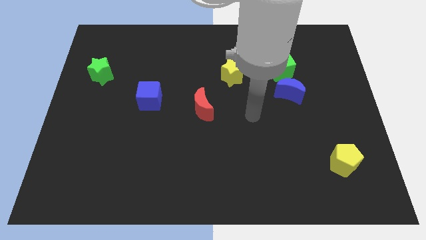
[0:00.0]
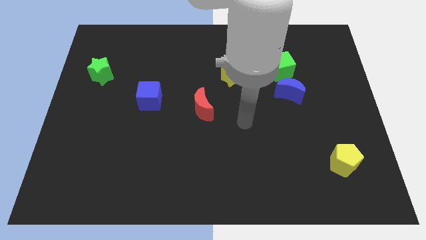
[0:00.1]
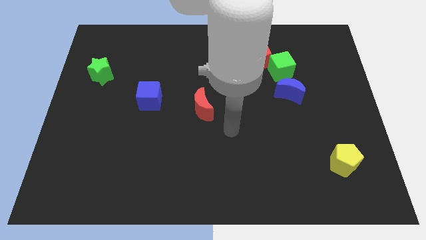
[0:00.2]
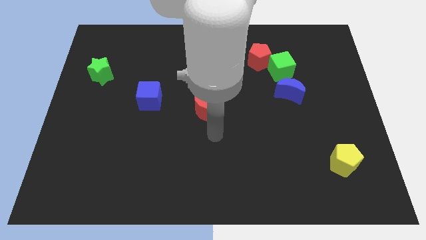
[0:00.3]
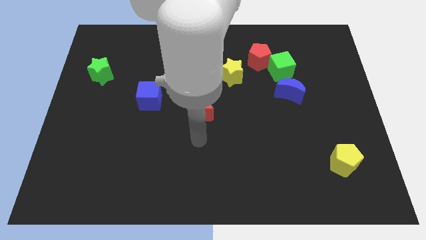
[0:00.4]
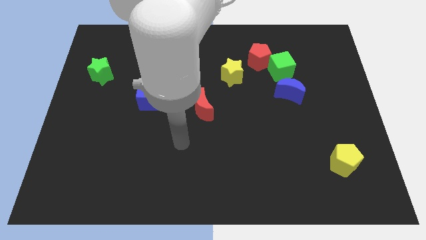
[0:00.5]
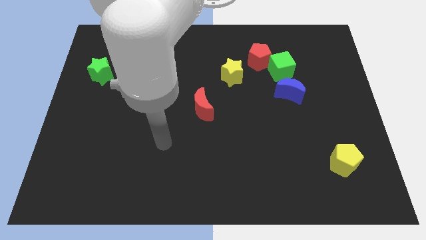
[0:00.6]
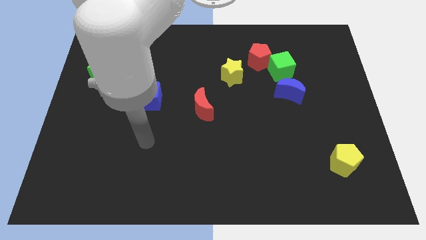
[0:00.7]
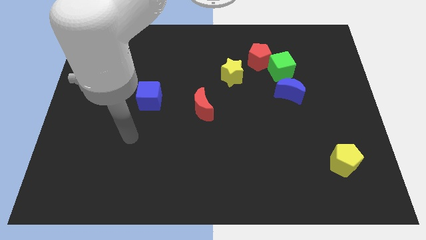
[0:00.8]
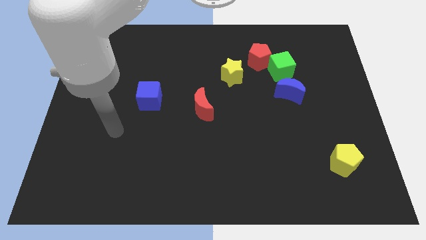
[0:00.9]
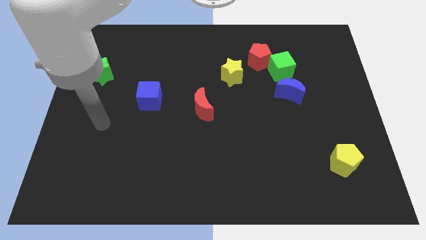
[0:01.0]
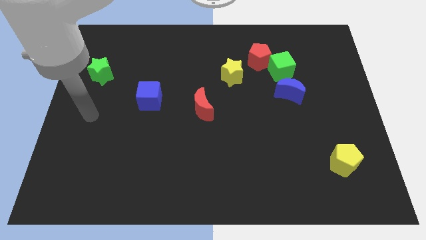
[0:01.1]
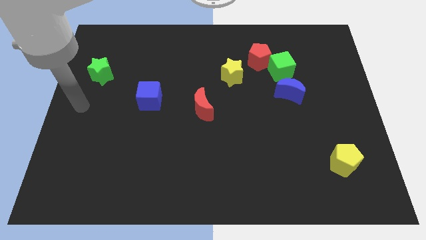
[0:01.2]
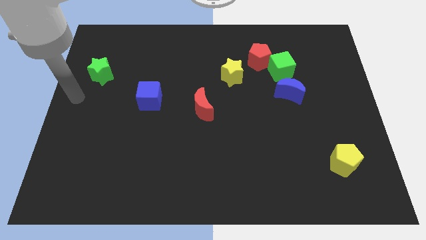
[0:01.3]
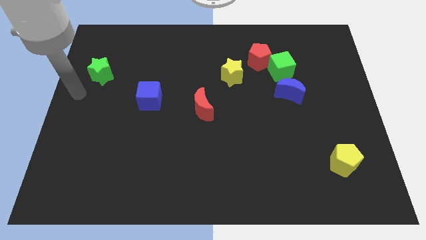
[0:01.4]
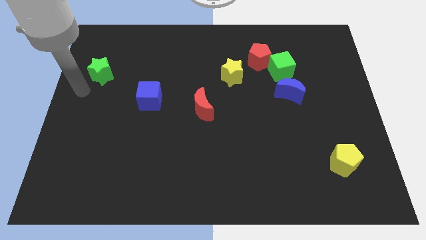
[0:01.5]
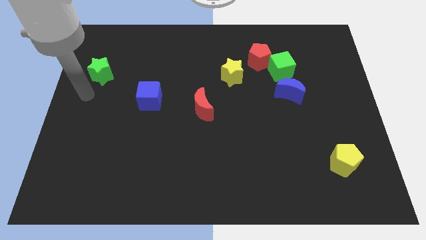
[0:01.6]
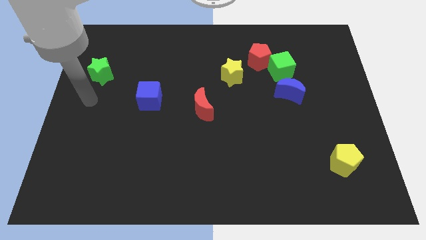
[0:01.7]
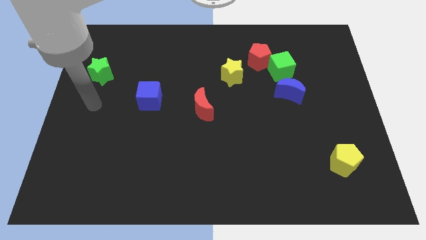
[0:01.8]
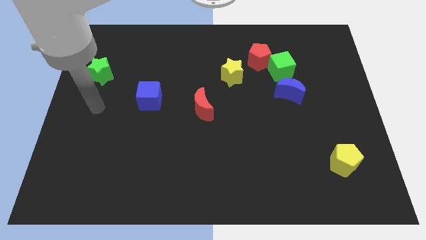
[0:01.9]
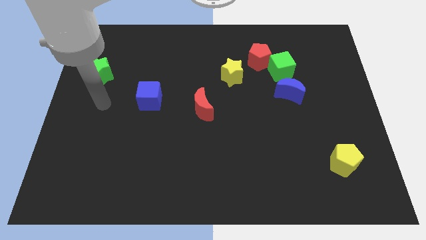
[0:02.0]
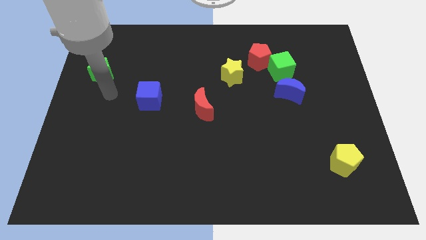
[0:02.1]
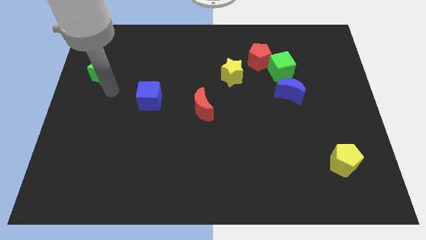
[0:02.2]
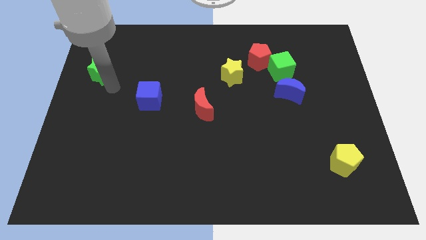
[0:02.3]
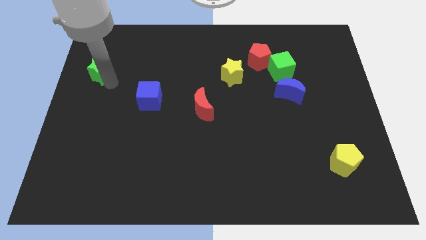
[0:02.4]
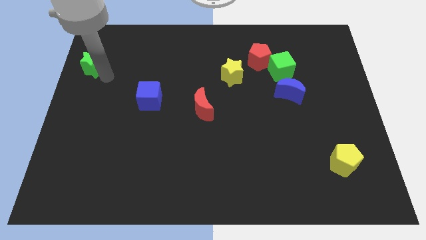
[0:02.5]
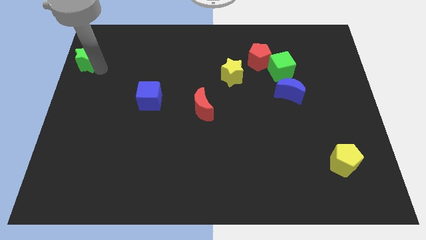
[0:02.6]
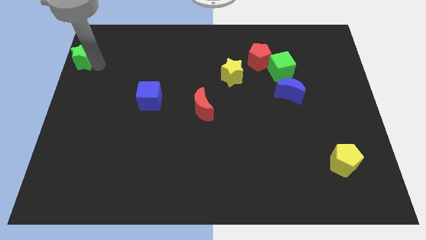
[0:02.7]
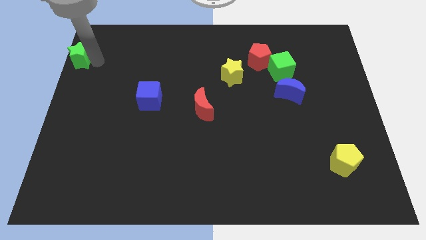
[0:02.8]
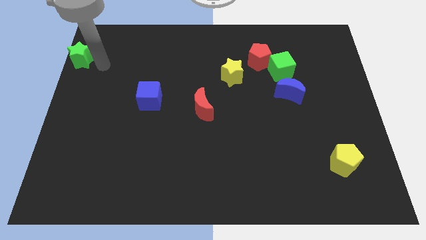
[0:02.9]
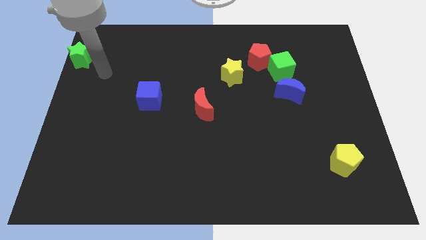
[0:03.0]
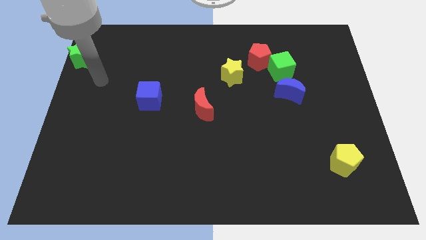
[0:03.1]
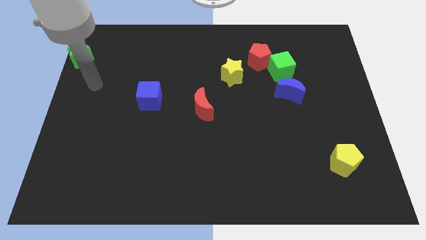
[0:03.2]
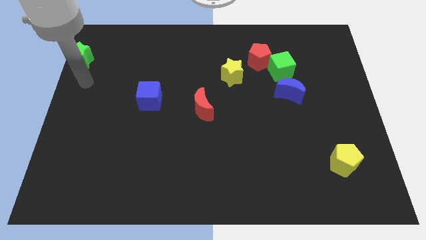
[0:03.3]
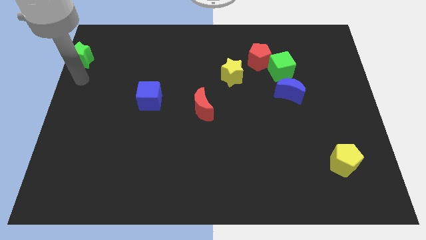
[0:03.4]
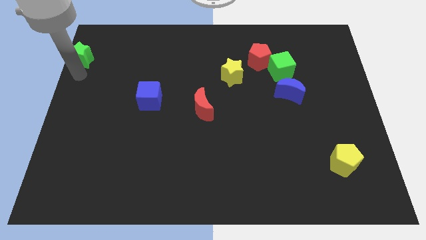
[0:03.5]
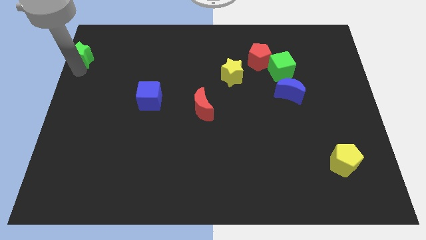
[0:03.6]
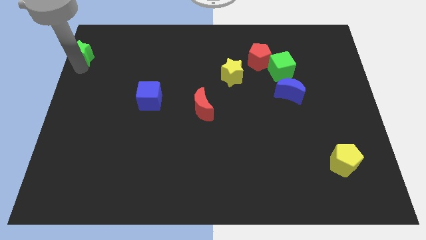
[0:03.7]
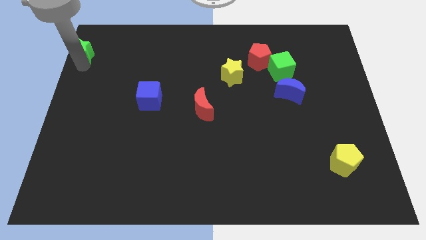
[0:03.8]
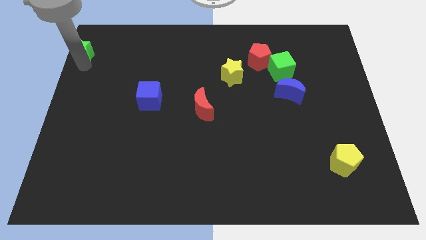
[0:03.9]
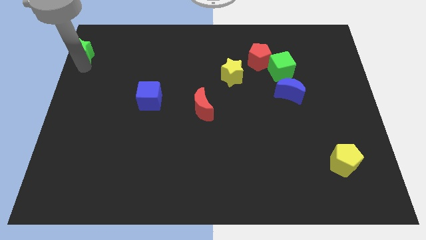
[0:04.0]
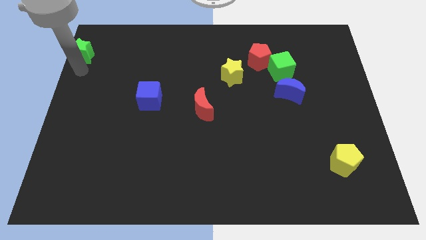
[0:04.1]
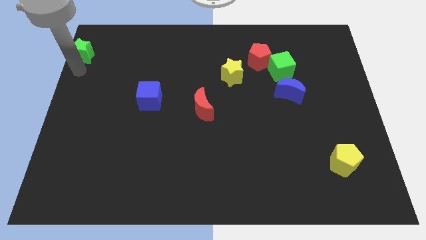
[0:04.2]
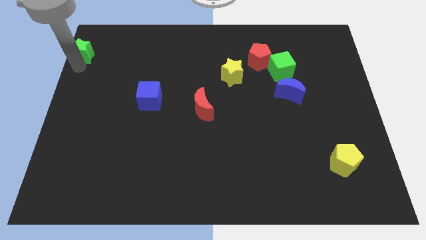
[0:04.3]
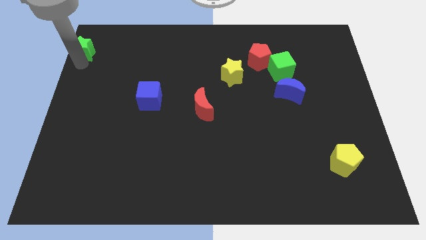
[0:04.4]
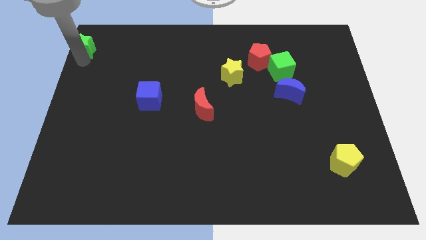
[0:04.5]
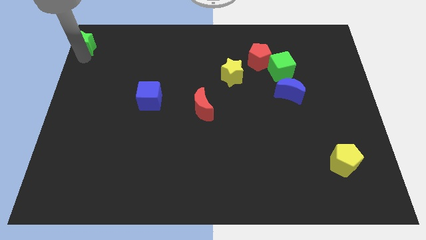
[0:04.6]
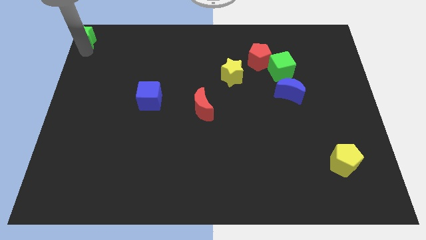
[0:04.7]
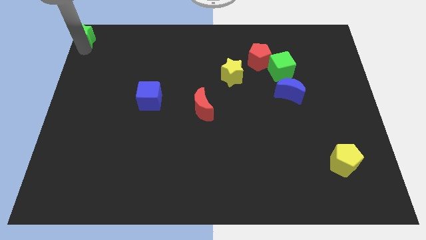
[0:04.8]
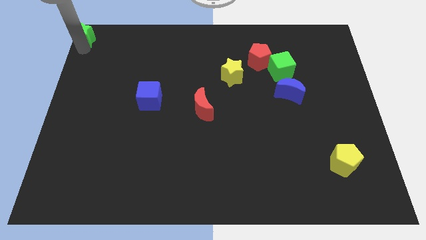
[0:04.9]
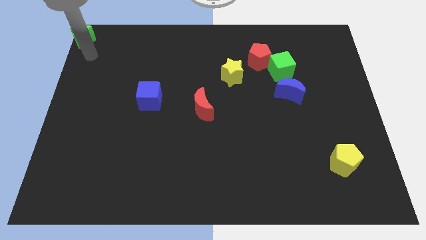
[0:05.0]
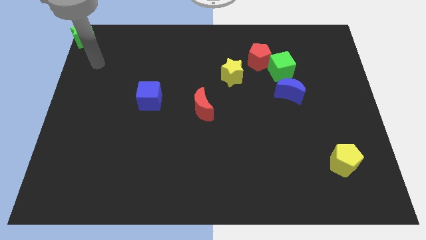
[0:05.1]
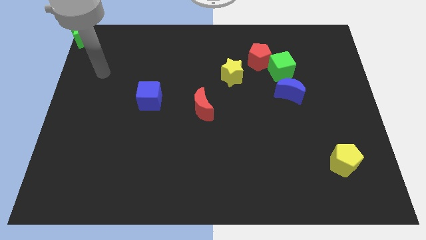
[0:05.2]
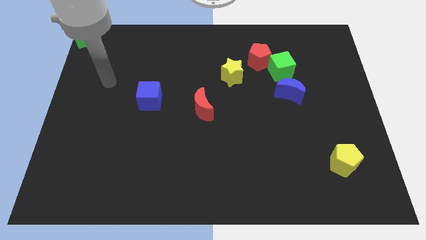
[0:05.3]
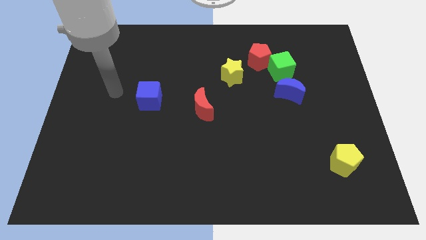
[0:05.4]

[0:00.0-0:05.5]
move the green star to the top left corner

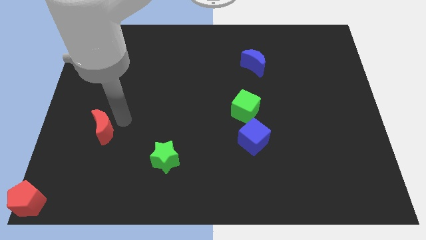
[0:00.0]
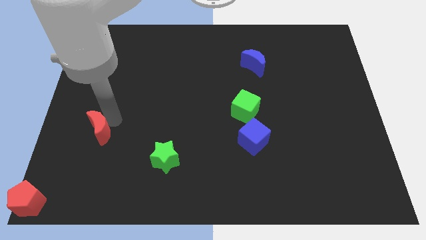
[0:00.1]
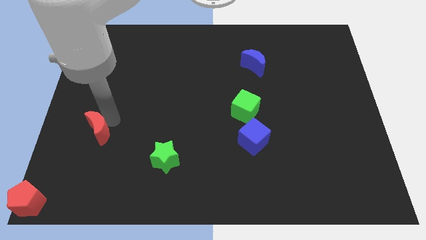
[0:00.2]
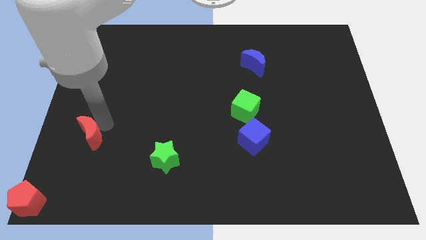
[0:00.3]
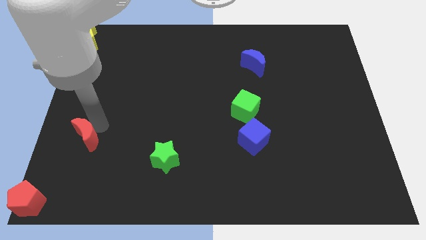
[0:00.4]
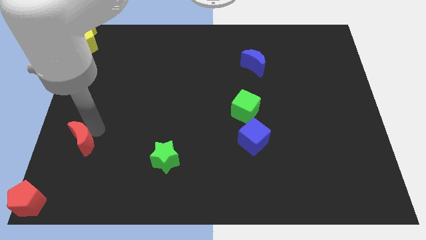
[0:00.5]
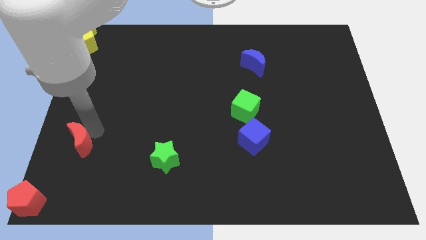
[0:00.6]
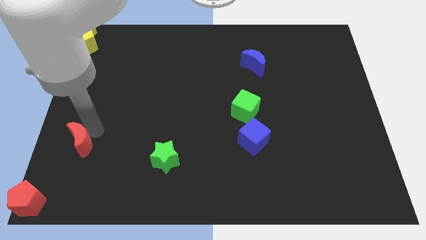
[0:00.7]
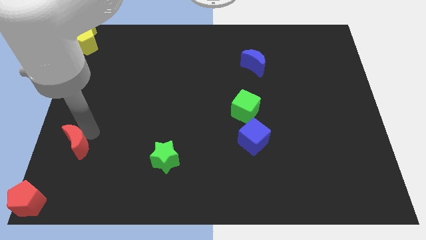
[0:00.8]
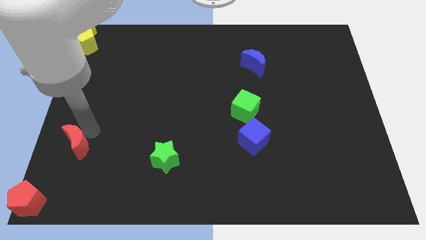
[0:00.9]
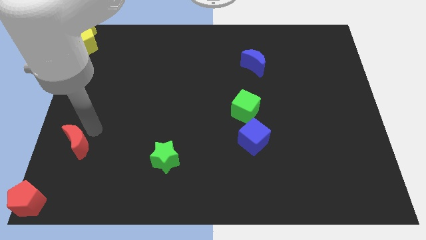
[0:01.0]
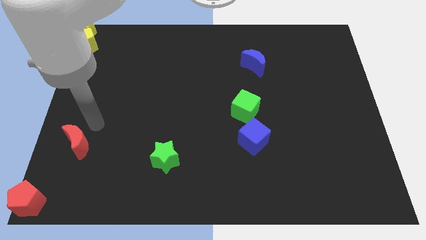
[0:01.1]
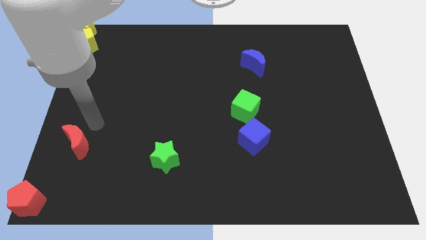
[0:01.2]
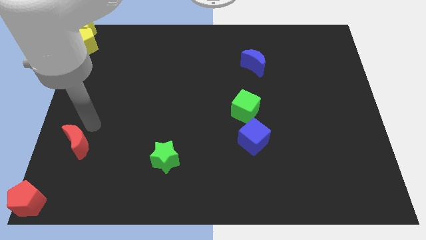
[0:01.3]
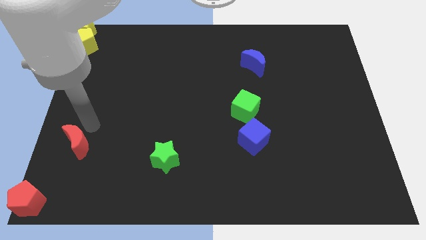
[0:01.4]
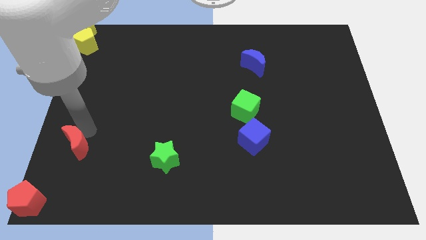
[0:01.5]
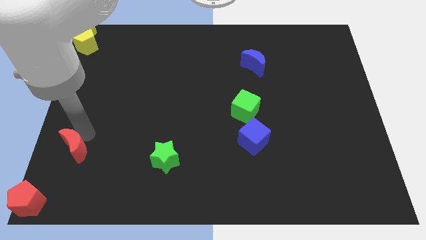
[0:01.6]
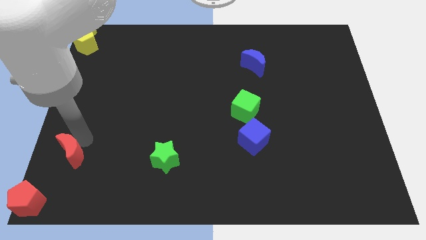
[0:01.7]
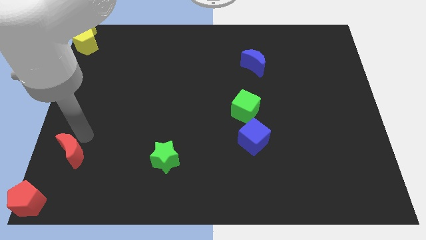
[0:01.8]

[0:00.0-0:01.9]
move the red moon towards the red pentagon

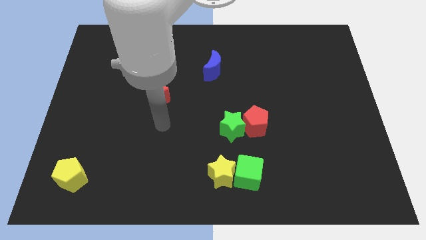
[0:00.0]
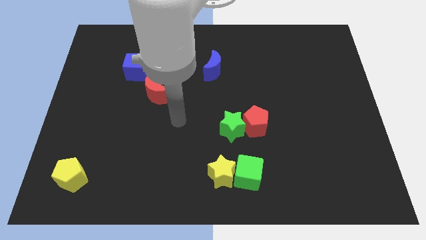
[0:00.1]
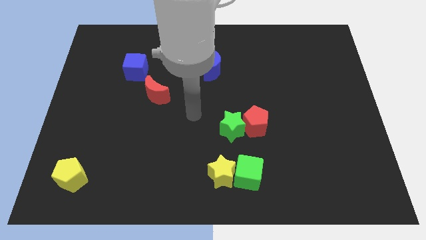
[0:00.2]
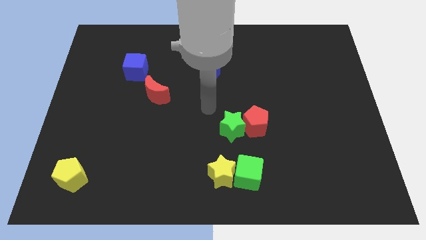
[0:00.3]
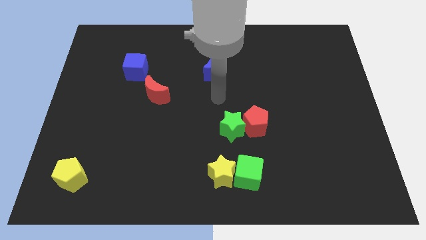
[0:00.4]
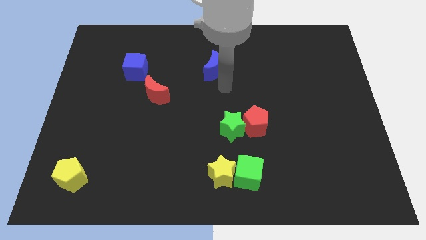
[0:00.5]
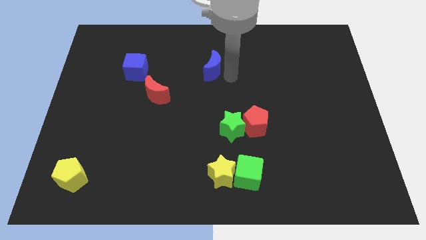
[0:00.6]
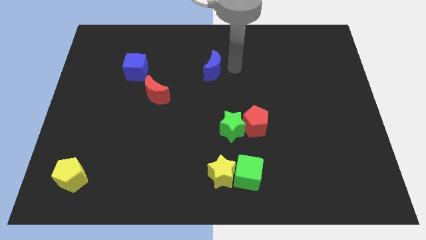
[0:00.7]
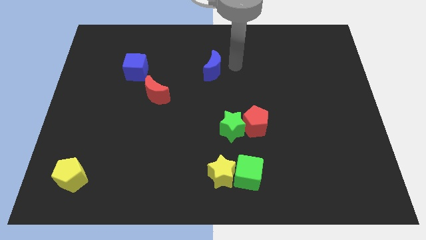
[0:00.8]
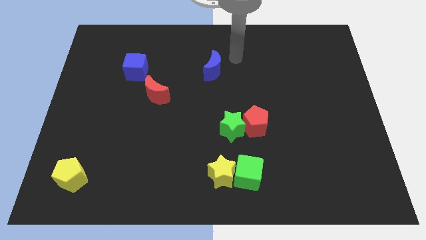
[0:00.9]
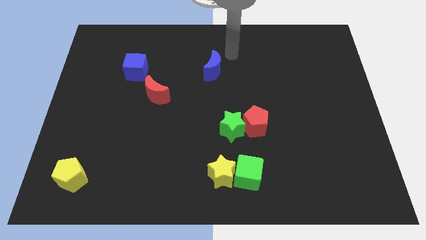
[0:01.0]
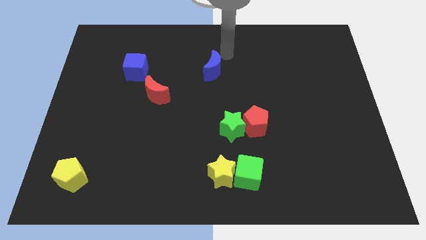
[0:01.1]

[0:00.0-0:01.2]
move your arm towards the top of the blue crescent

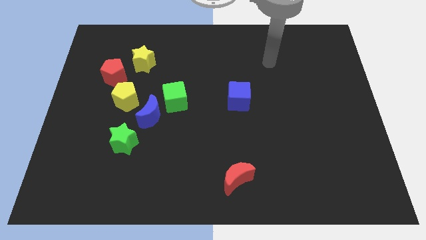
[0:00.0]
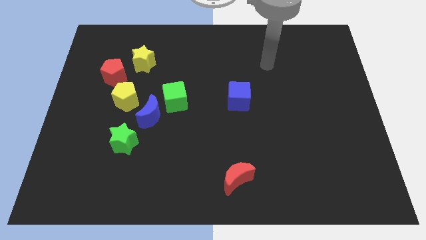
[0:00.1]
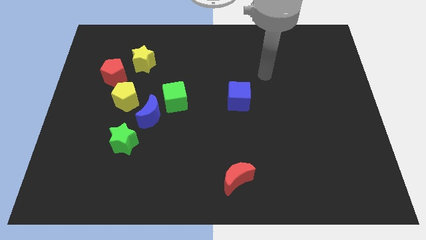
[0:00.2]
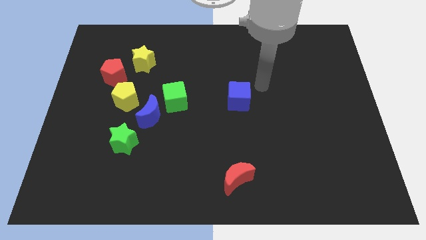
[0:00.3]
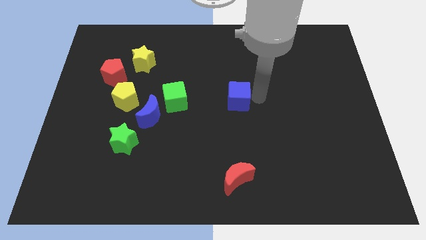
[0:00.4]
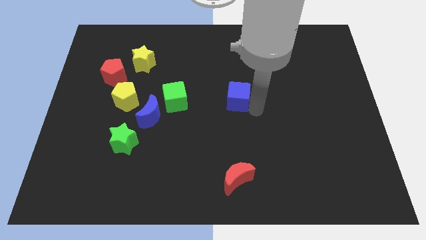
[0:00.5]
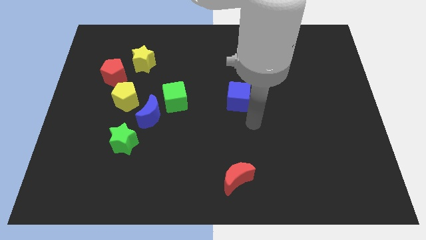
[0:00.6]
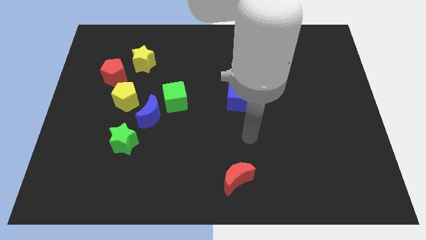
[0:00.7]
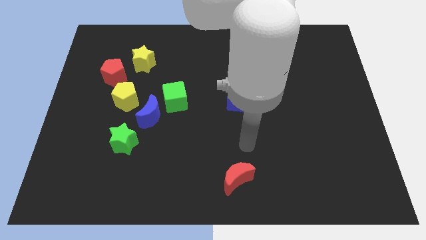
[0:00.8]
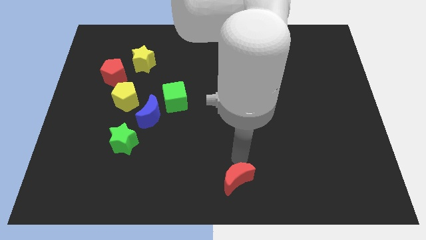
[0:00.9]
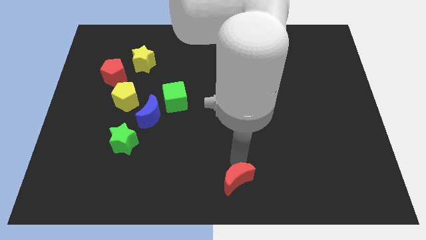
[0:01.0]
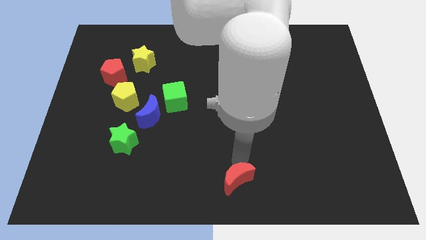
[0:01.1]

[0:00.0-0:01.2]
move your hand to the top of the red rescent
